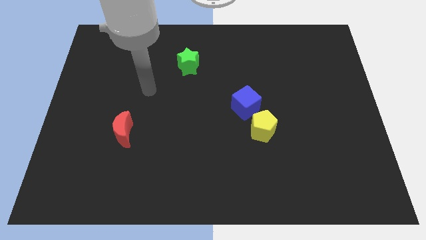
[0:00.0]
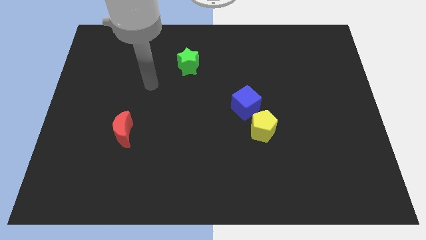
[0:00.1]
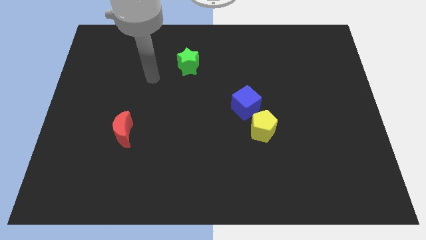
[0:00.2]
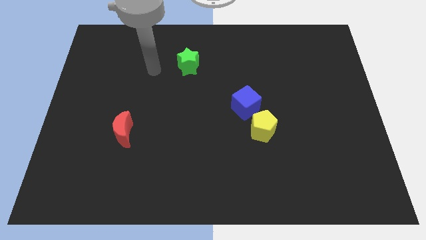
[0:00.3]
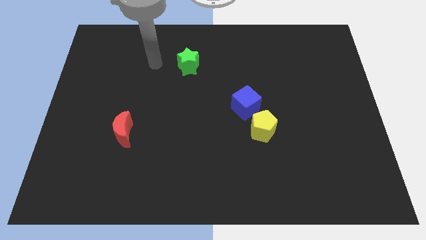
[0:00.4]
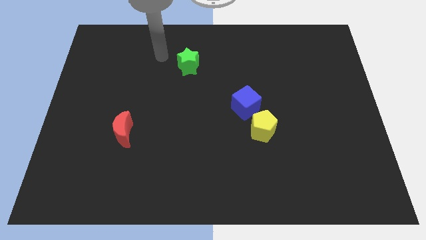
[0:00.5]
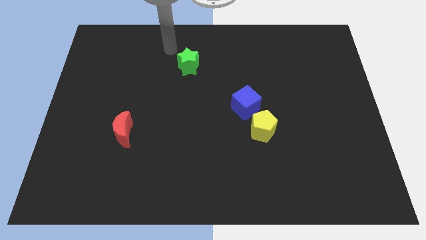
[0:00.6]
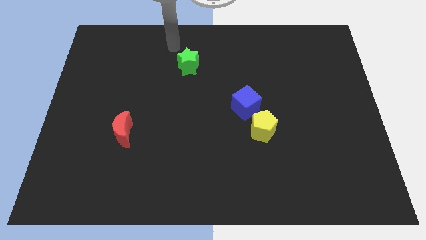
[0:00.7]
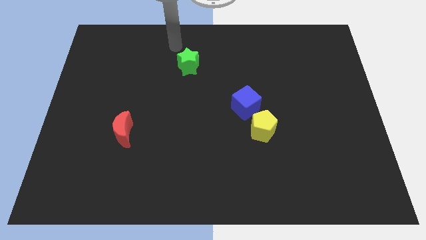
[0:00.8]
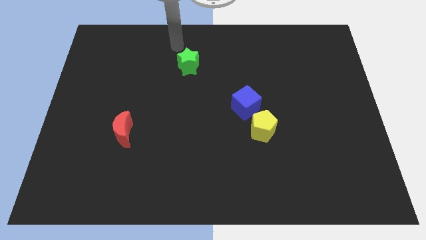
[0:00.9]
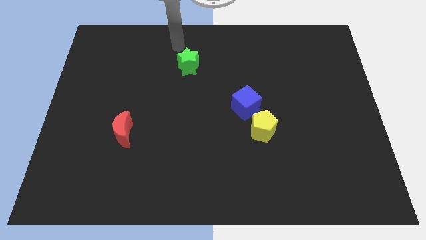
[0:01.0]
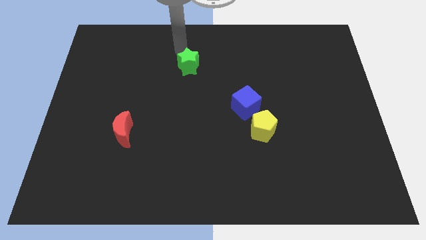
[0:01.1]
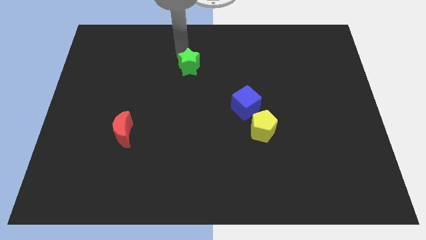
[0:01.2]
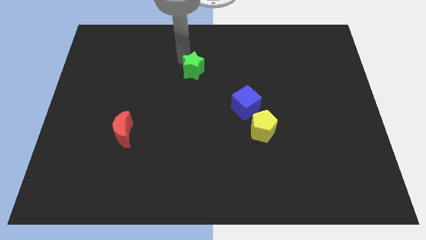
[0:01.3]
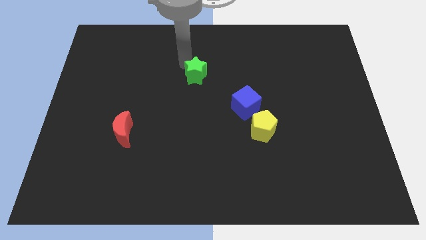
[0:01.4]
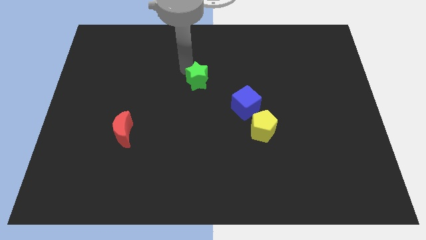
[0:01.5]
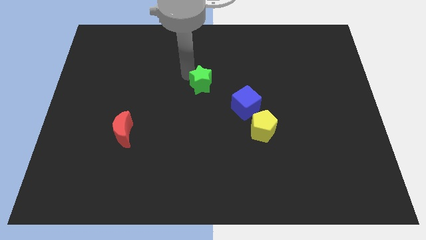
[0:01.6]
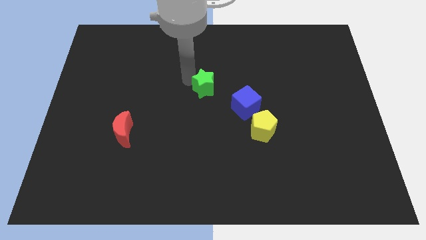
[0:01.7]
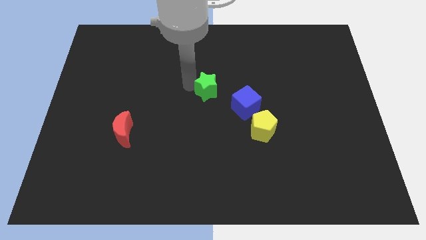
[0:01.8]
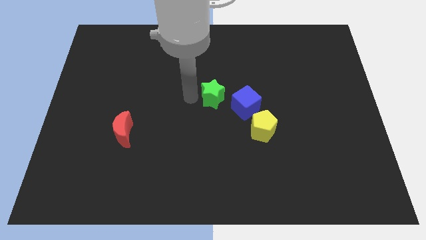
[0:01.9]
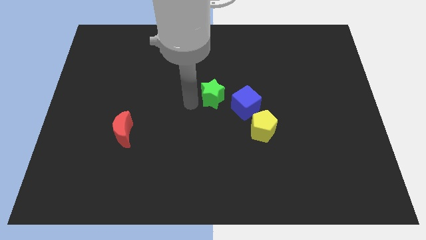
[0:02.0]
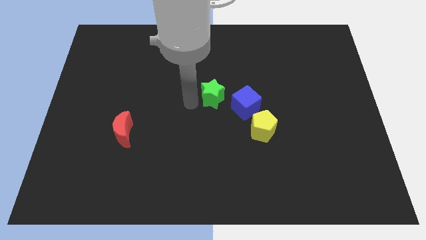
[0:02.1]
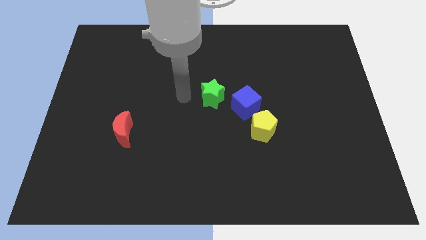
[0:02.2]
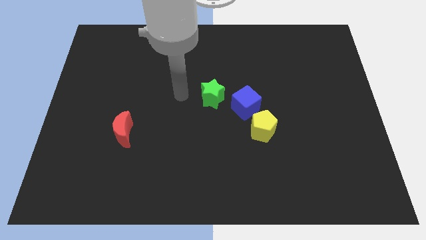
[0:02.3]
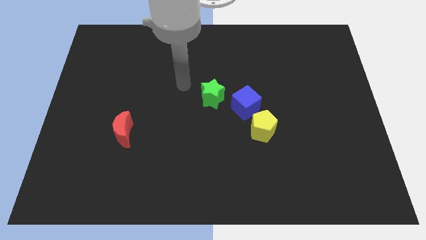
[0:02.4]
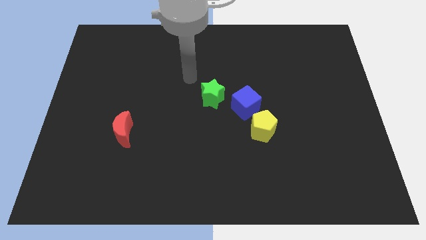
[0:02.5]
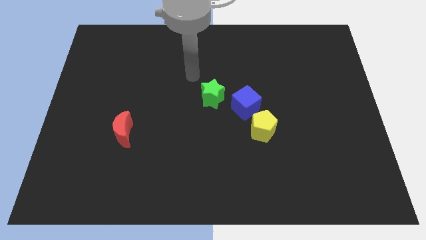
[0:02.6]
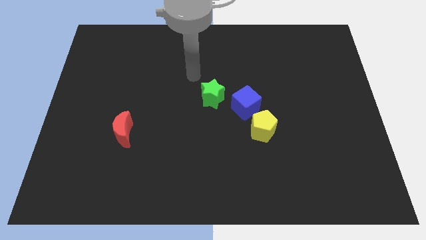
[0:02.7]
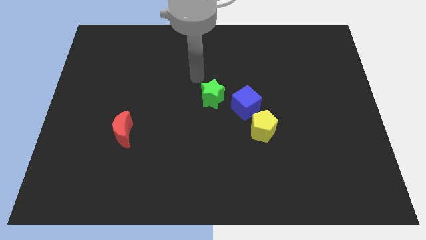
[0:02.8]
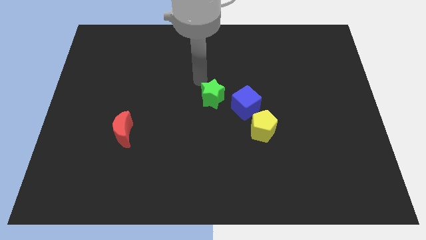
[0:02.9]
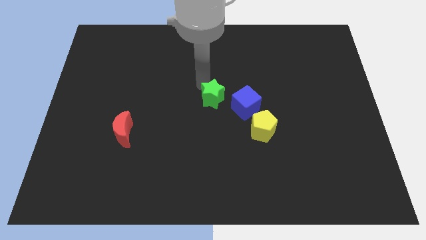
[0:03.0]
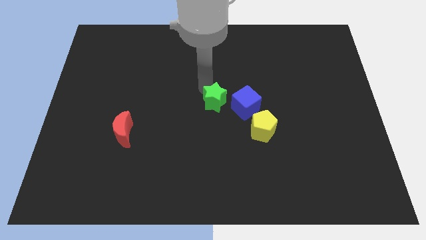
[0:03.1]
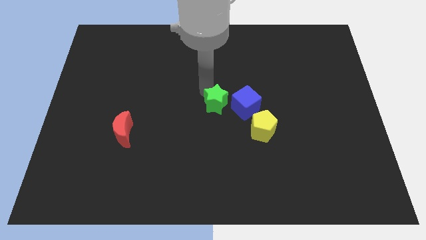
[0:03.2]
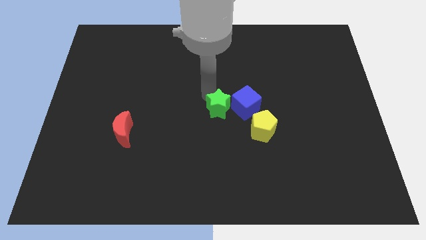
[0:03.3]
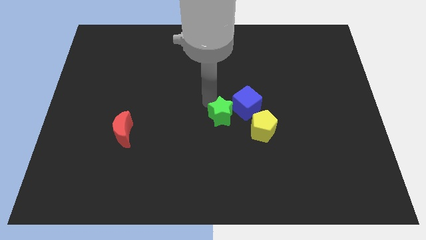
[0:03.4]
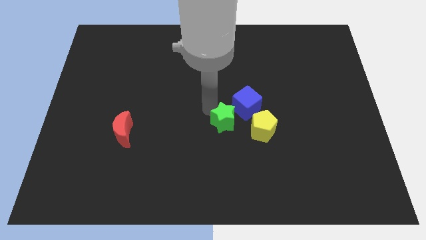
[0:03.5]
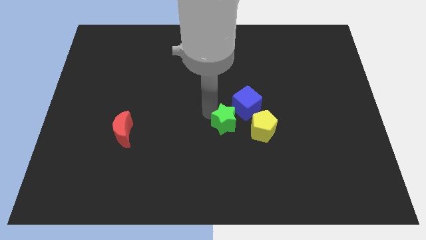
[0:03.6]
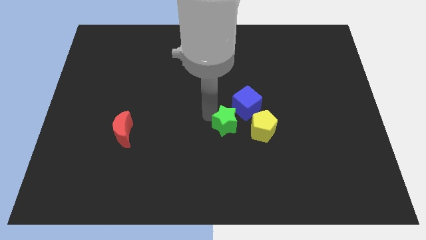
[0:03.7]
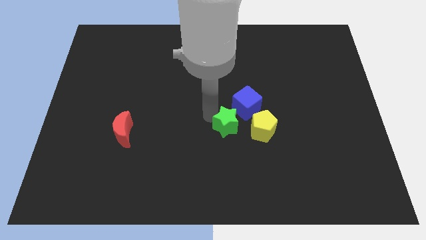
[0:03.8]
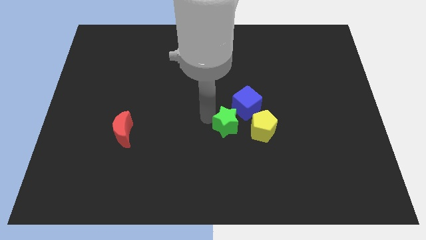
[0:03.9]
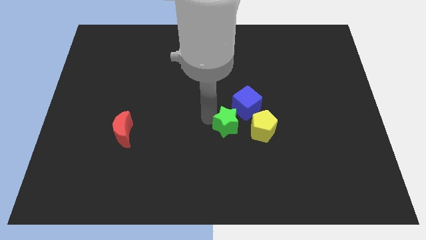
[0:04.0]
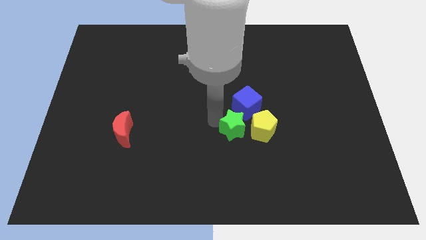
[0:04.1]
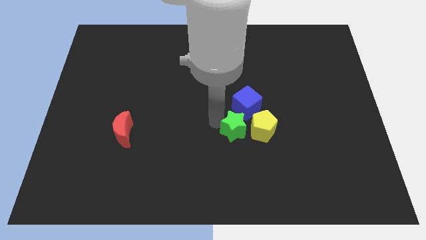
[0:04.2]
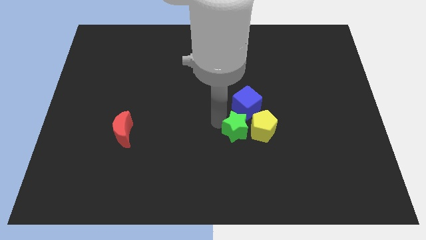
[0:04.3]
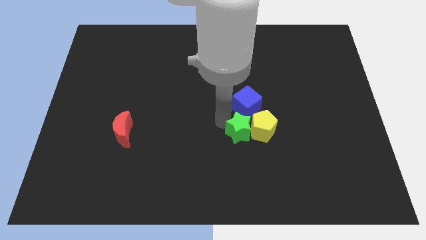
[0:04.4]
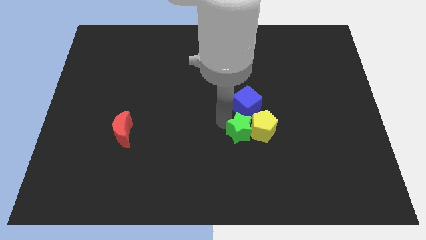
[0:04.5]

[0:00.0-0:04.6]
slide the green block close to the yellow block

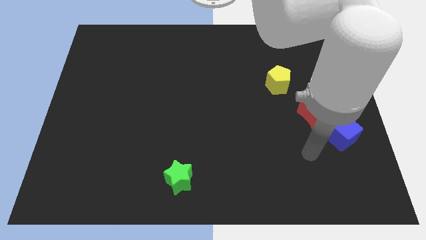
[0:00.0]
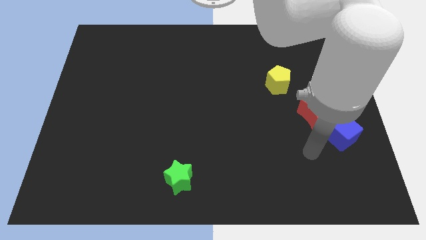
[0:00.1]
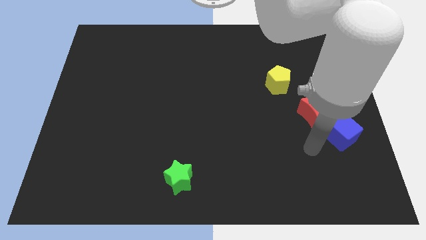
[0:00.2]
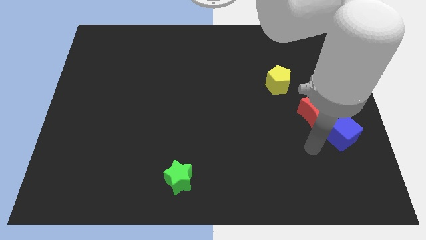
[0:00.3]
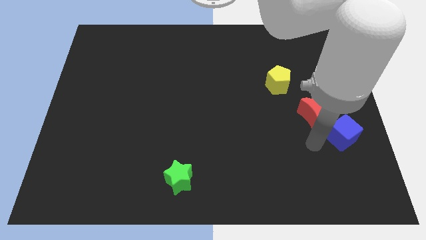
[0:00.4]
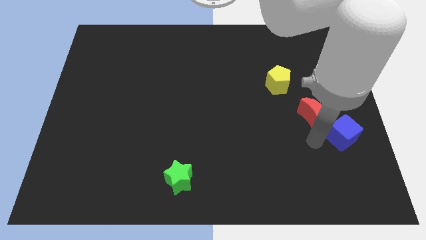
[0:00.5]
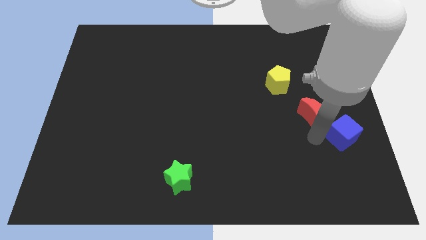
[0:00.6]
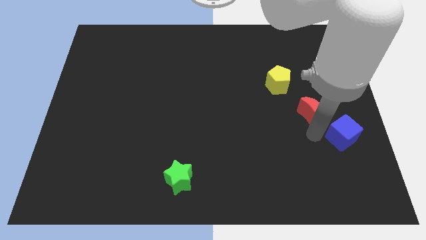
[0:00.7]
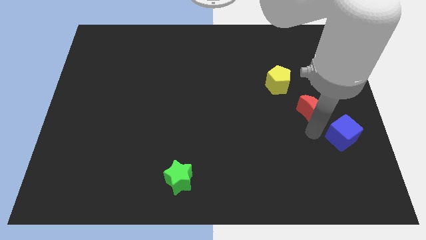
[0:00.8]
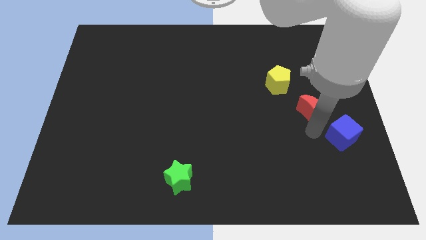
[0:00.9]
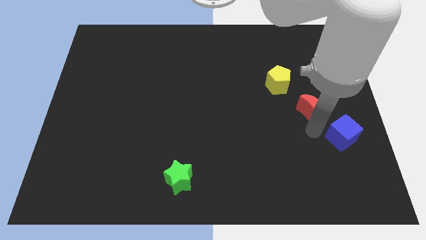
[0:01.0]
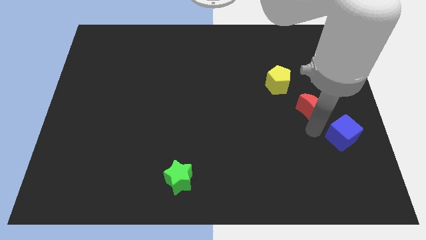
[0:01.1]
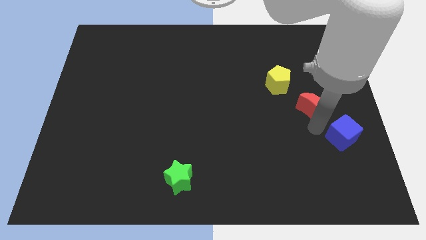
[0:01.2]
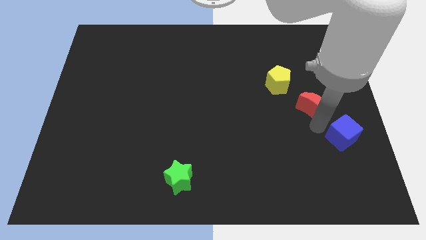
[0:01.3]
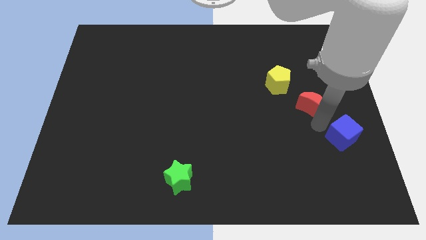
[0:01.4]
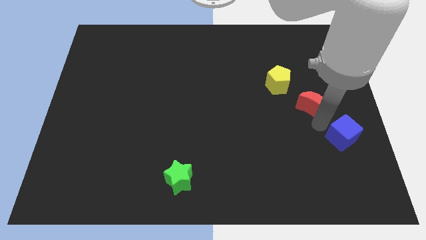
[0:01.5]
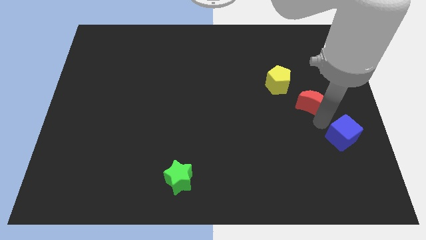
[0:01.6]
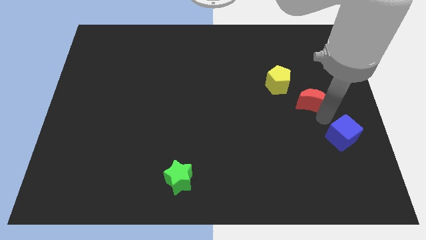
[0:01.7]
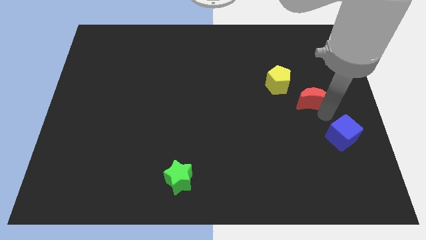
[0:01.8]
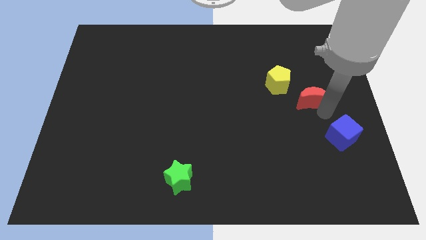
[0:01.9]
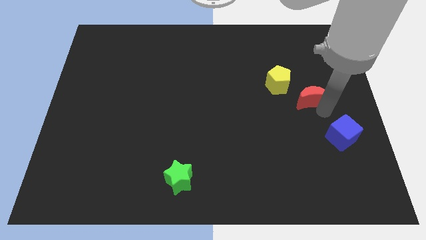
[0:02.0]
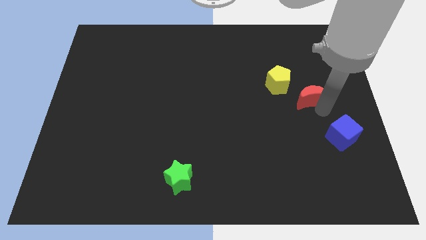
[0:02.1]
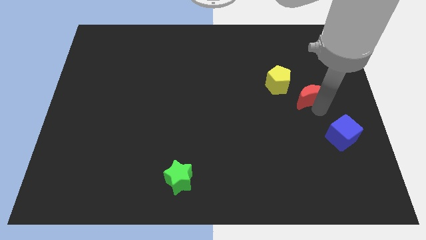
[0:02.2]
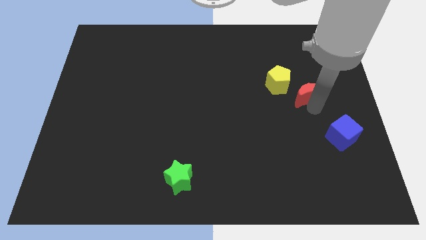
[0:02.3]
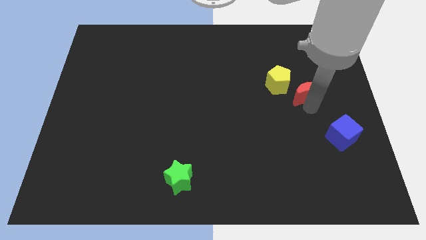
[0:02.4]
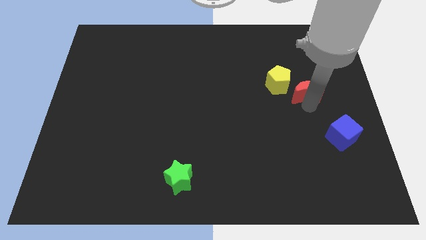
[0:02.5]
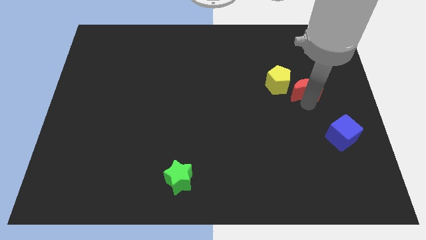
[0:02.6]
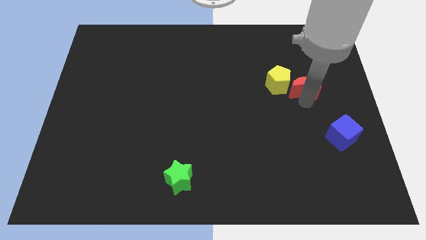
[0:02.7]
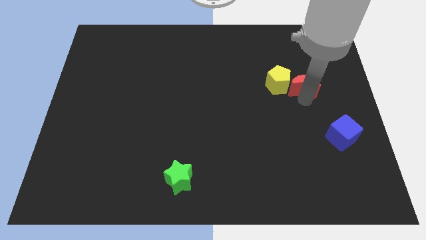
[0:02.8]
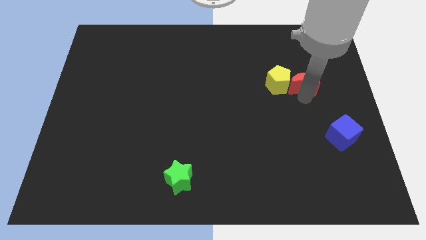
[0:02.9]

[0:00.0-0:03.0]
push the moon to the yellow block

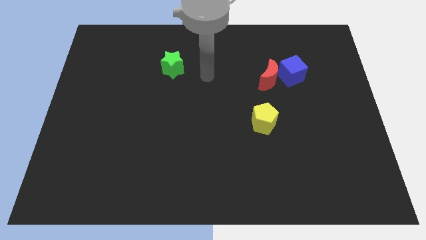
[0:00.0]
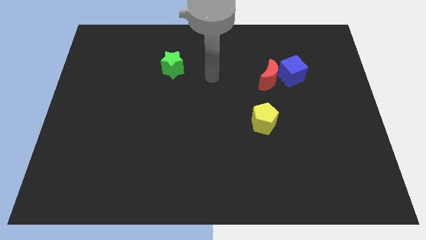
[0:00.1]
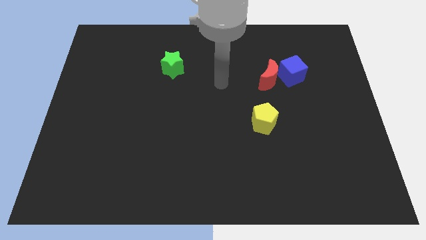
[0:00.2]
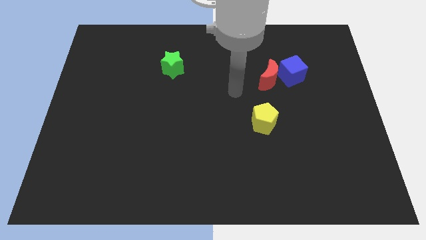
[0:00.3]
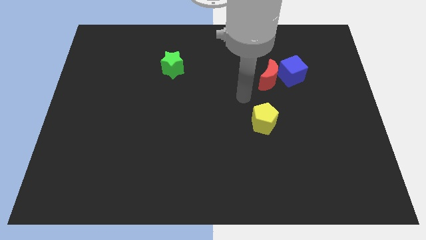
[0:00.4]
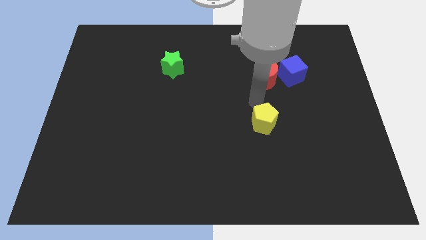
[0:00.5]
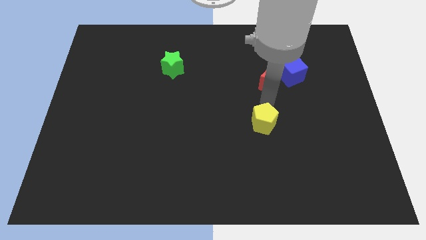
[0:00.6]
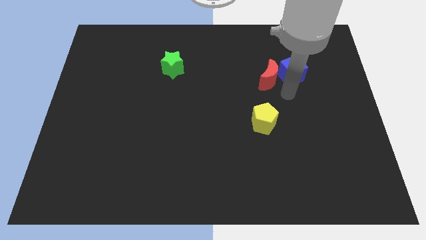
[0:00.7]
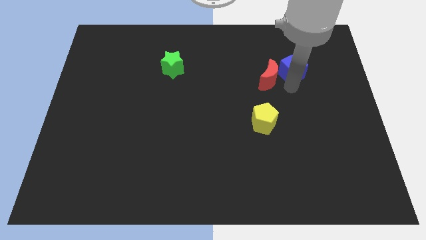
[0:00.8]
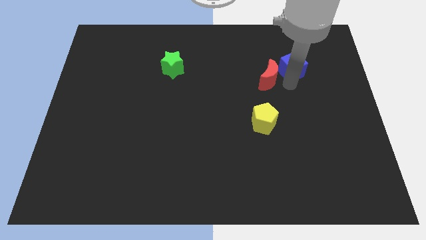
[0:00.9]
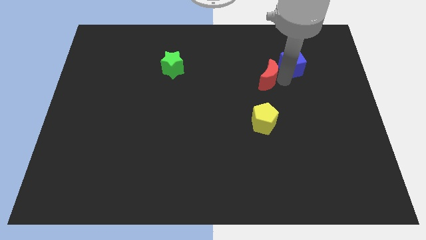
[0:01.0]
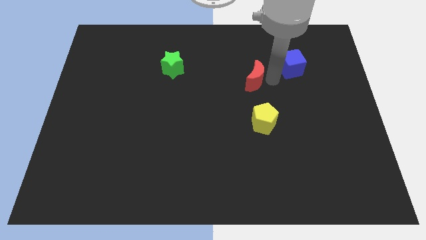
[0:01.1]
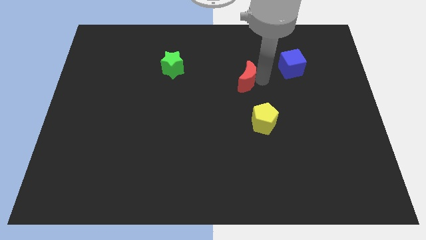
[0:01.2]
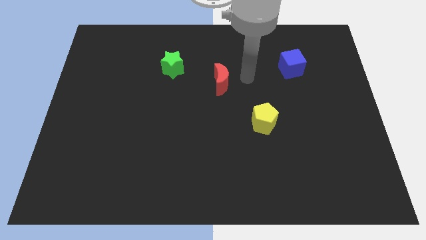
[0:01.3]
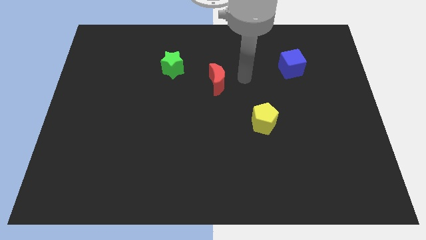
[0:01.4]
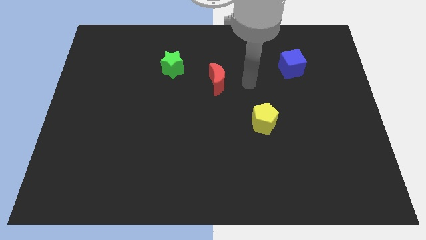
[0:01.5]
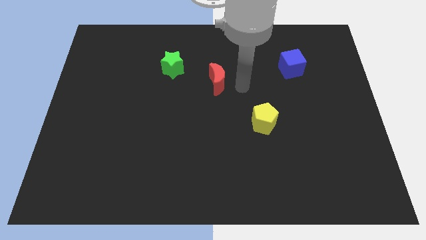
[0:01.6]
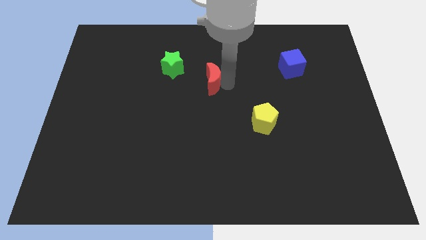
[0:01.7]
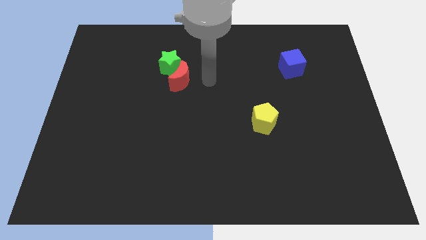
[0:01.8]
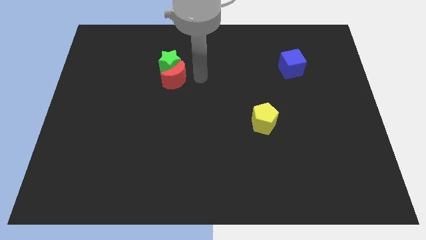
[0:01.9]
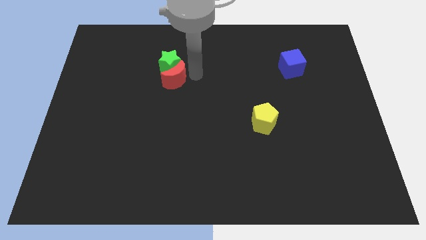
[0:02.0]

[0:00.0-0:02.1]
slide the red moon close to the green block
